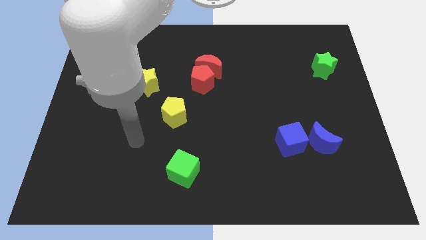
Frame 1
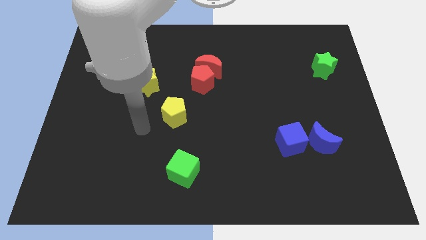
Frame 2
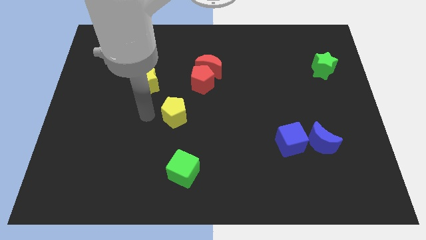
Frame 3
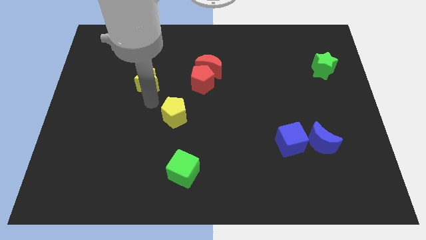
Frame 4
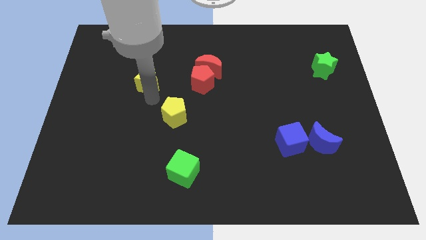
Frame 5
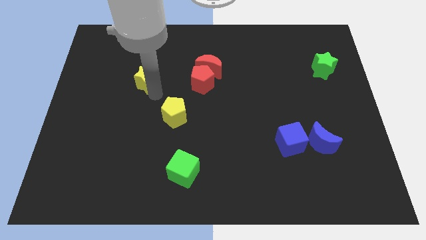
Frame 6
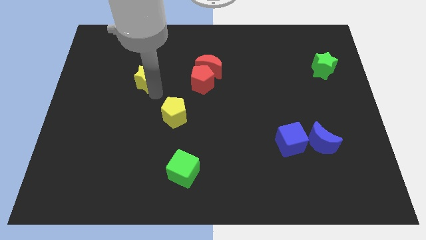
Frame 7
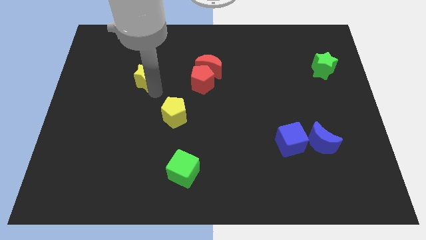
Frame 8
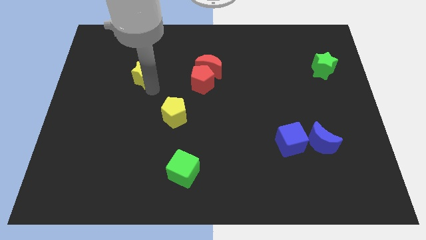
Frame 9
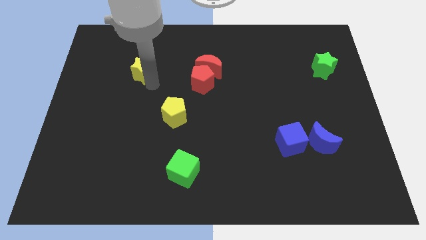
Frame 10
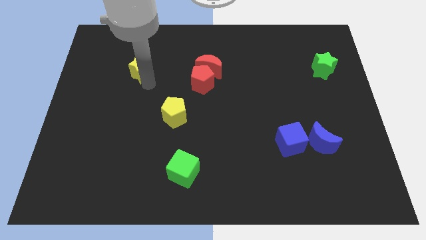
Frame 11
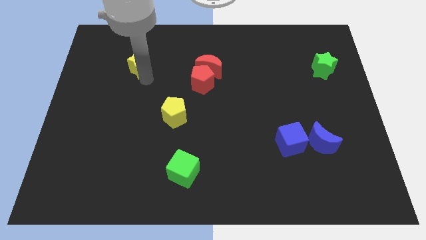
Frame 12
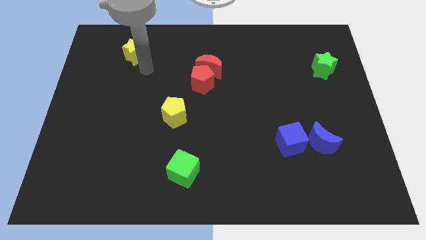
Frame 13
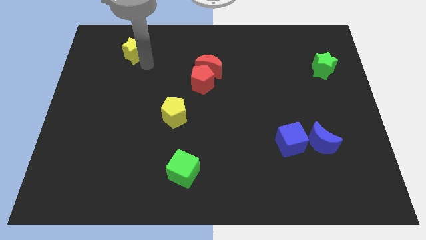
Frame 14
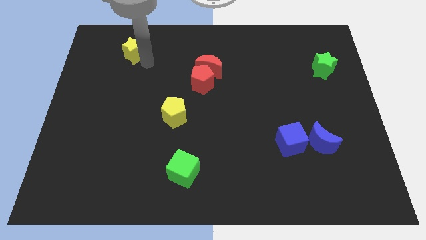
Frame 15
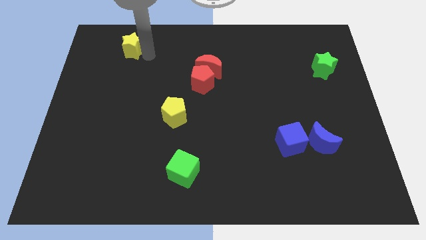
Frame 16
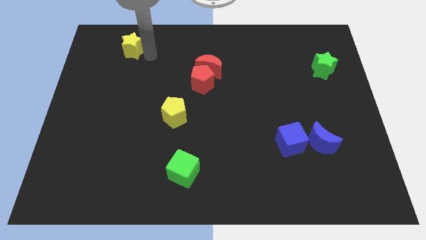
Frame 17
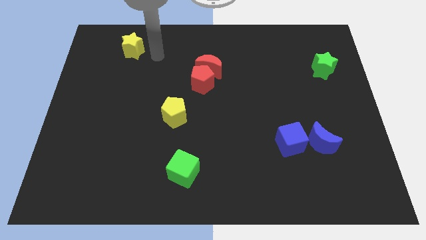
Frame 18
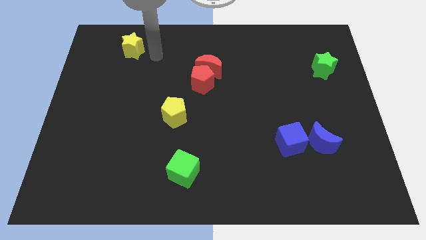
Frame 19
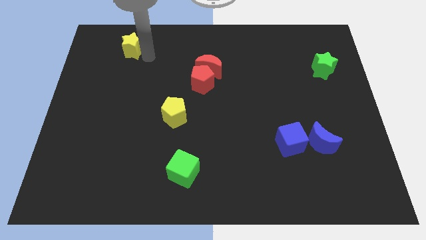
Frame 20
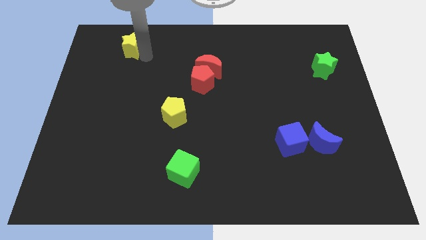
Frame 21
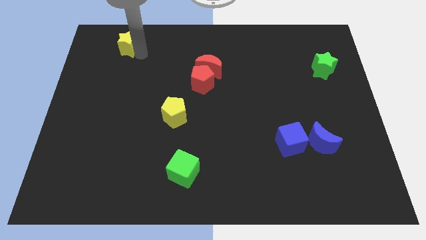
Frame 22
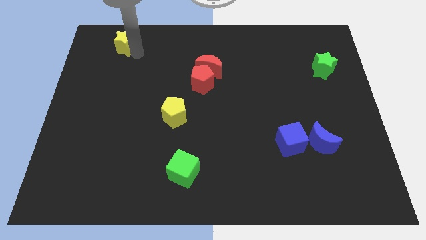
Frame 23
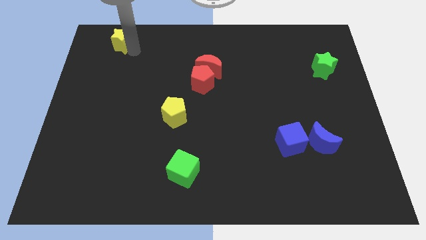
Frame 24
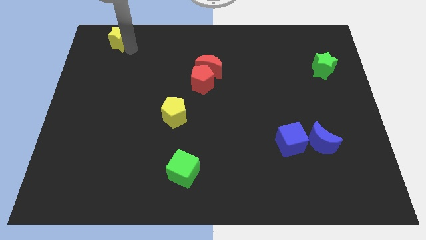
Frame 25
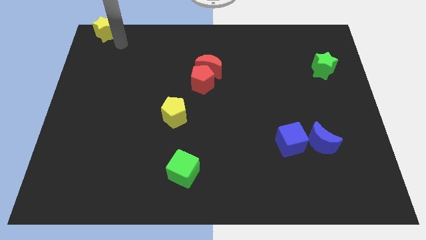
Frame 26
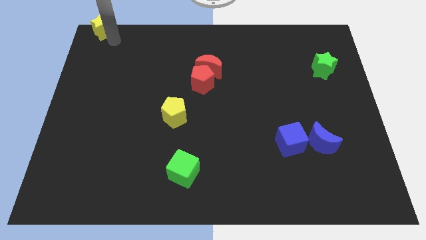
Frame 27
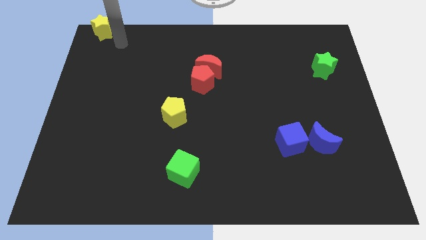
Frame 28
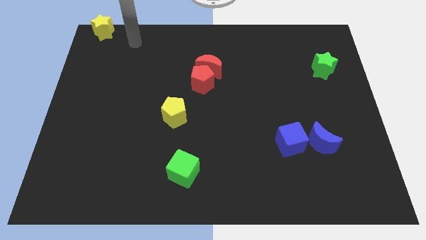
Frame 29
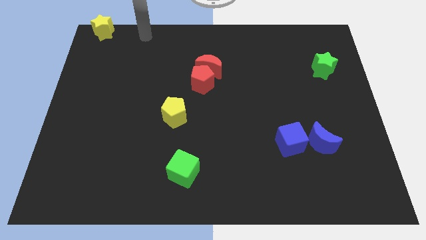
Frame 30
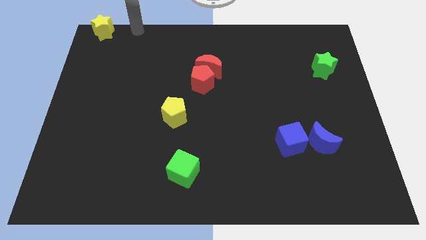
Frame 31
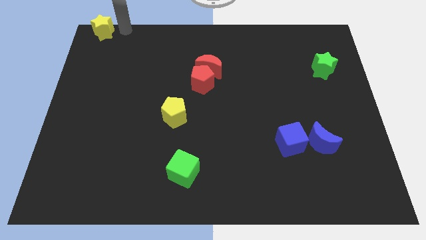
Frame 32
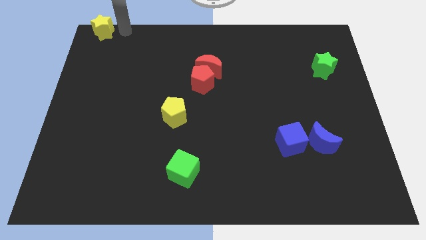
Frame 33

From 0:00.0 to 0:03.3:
slide the yellow star to the top left corner of the board

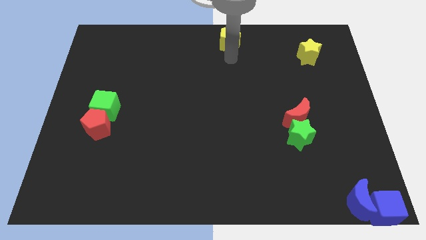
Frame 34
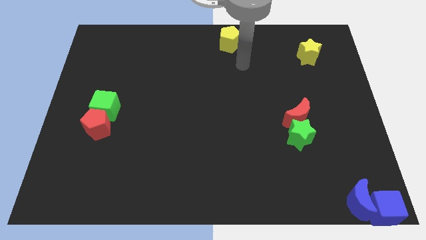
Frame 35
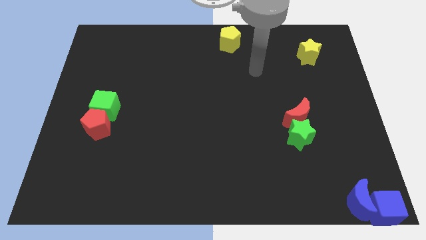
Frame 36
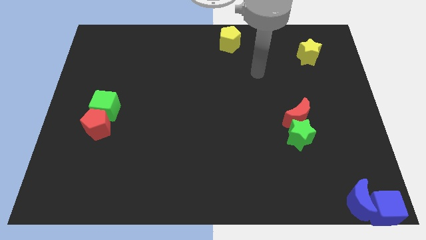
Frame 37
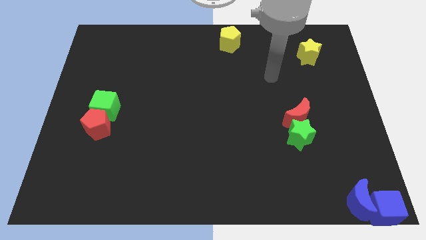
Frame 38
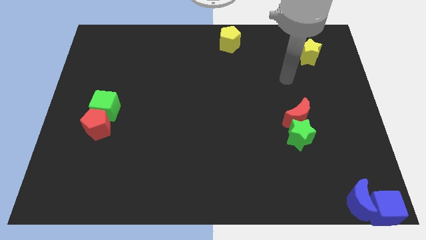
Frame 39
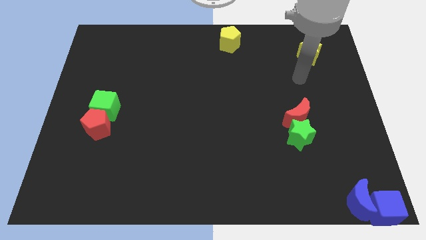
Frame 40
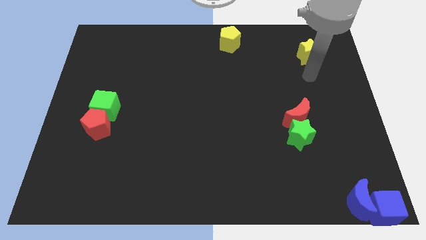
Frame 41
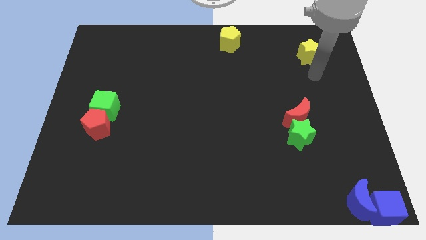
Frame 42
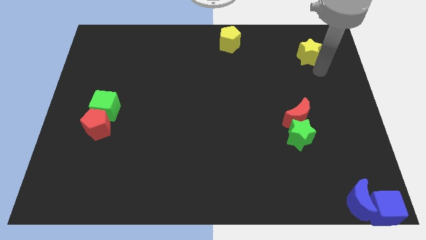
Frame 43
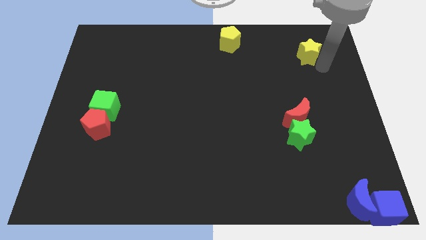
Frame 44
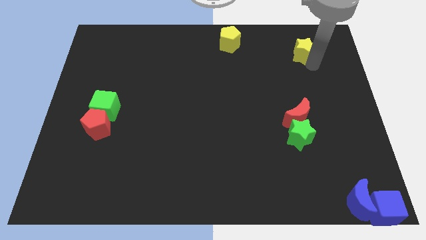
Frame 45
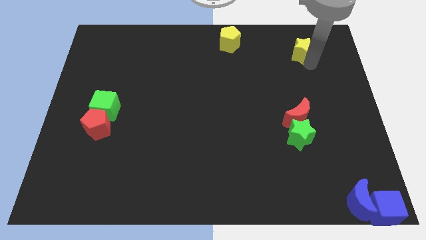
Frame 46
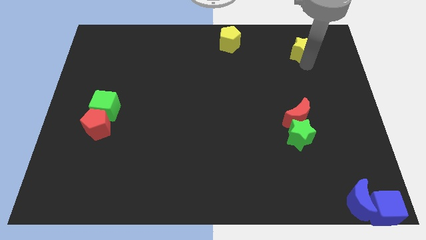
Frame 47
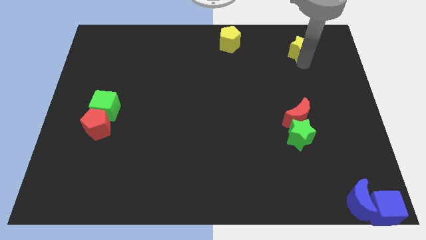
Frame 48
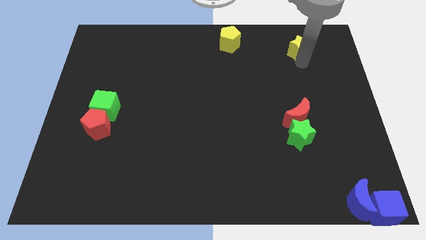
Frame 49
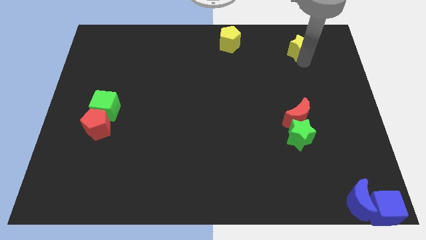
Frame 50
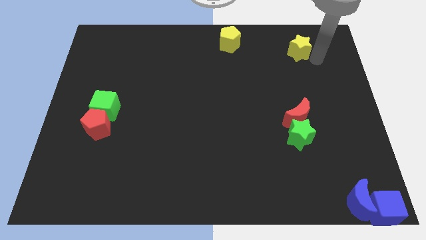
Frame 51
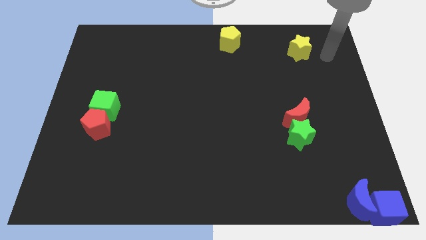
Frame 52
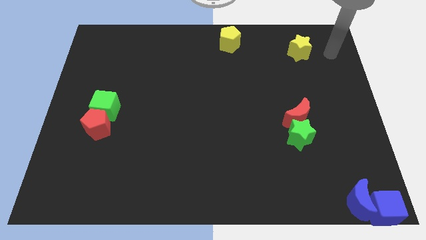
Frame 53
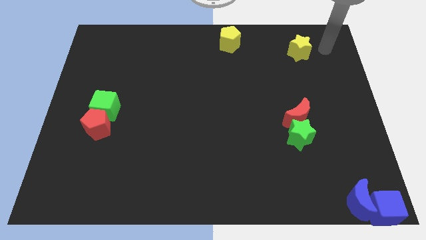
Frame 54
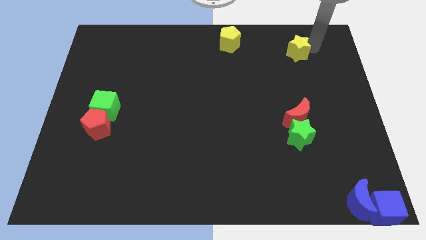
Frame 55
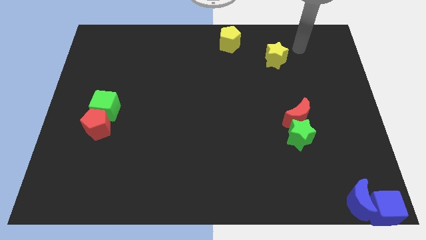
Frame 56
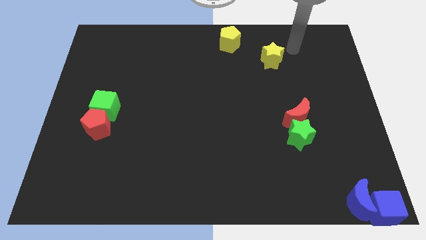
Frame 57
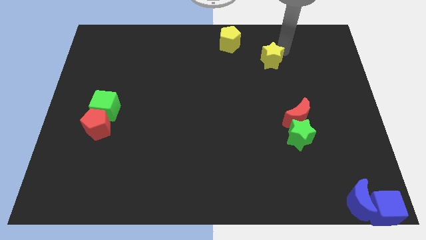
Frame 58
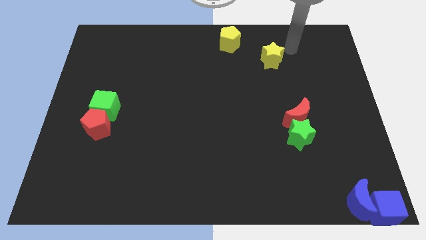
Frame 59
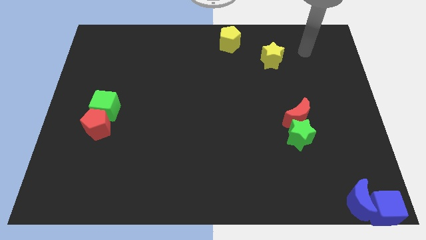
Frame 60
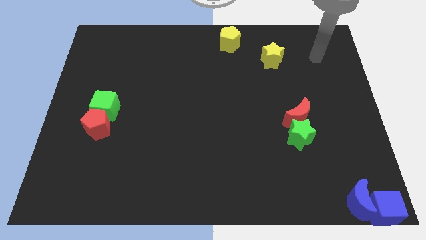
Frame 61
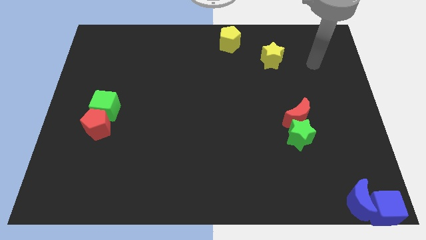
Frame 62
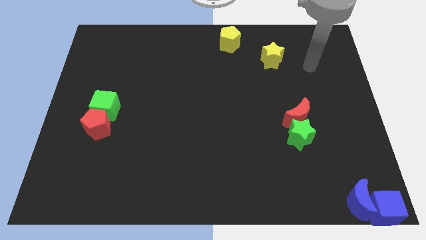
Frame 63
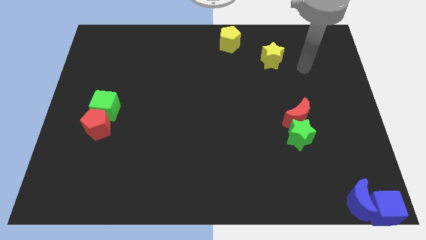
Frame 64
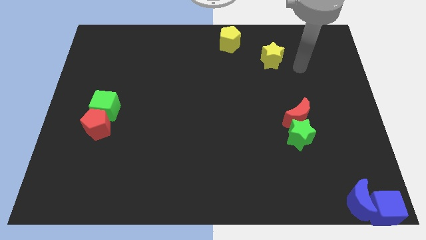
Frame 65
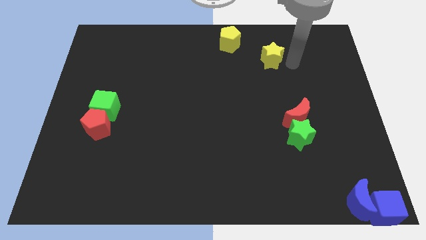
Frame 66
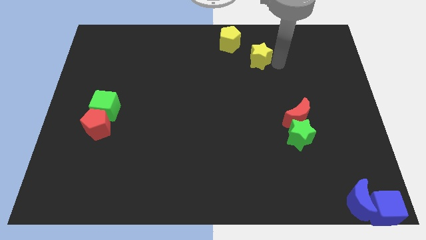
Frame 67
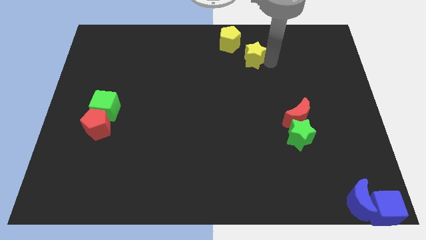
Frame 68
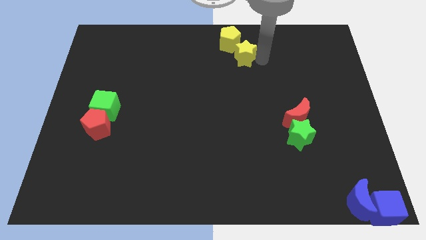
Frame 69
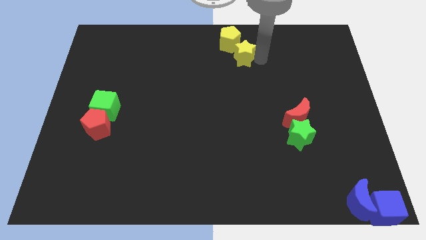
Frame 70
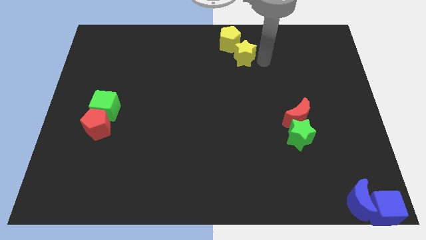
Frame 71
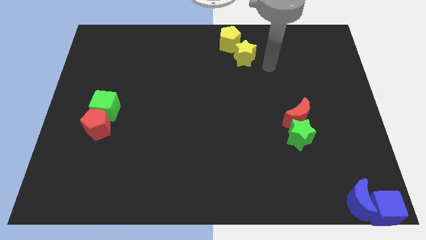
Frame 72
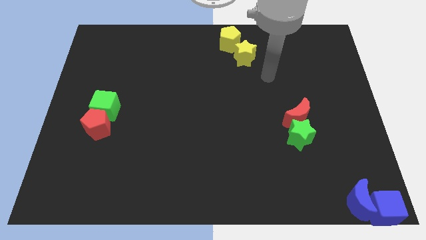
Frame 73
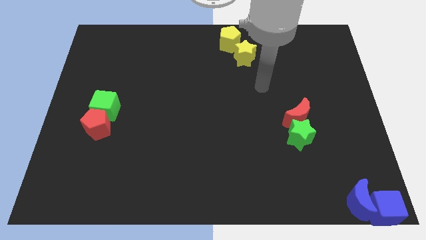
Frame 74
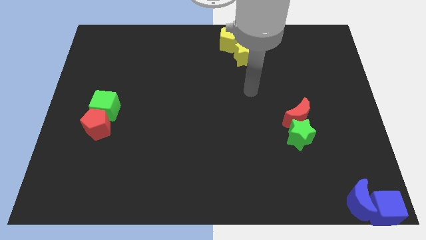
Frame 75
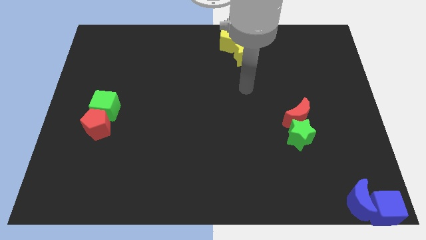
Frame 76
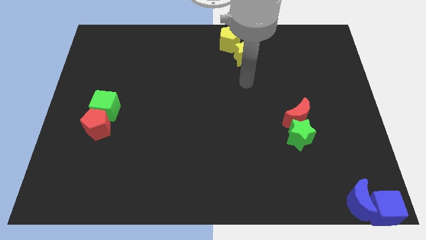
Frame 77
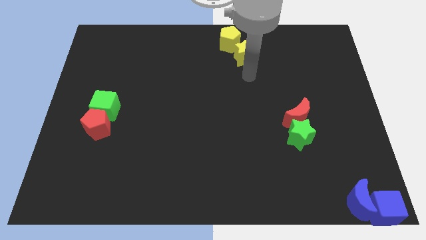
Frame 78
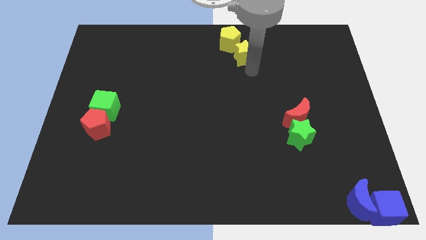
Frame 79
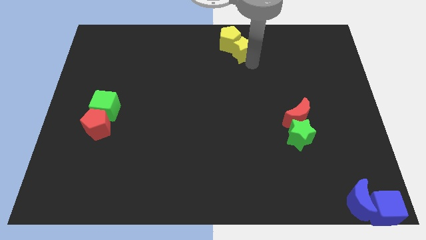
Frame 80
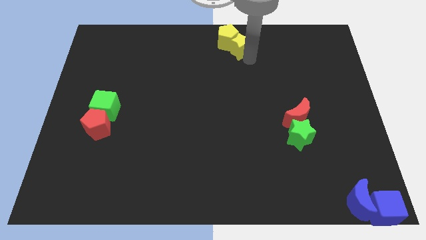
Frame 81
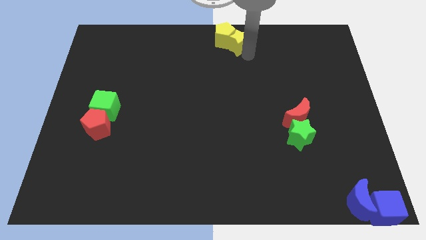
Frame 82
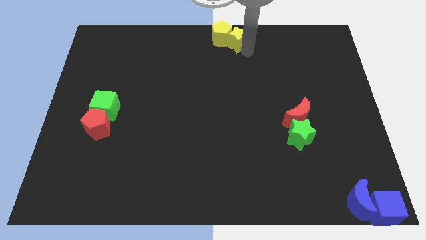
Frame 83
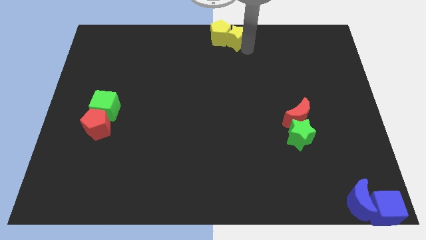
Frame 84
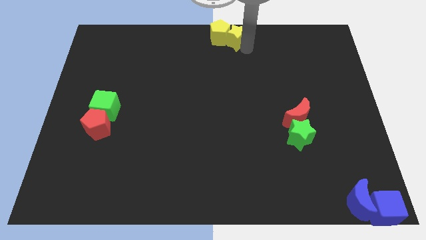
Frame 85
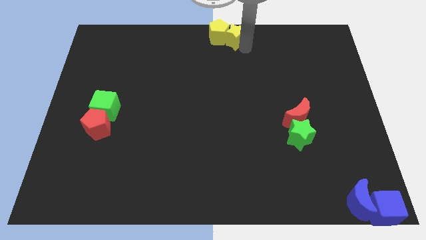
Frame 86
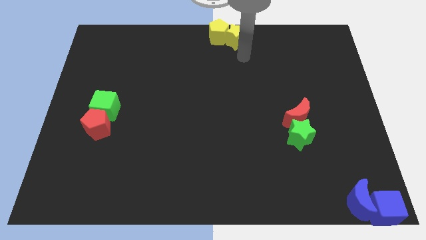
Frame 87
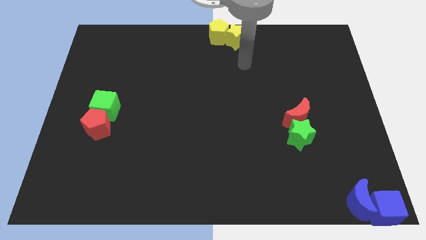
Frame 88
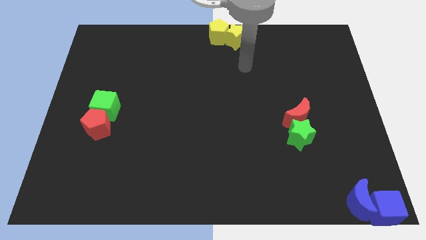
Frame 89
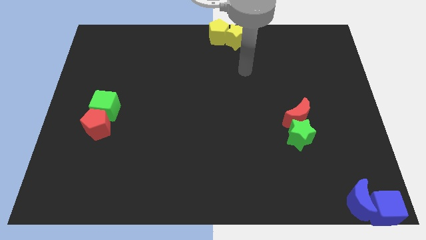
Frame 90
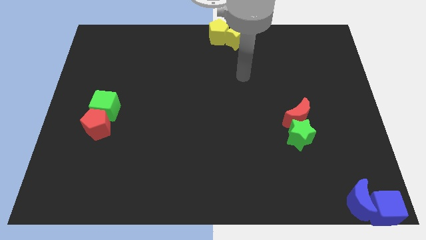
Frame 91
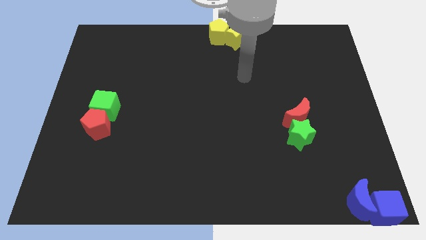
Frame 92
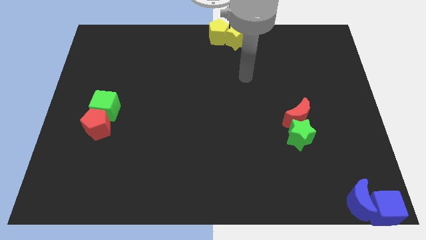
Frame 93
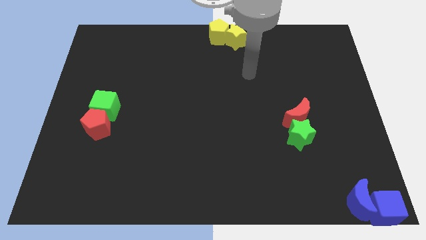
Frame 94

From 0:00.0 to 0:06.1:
slide the yellow star into the yellow pentagon
